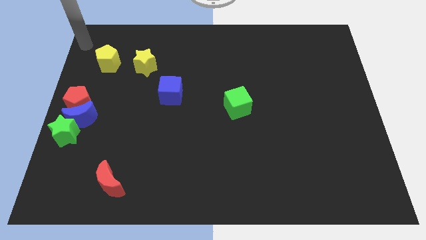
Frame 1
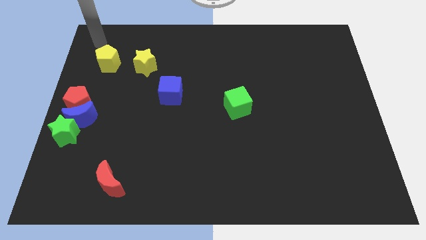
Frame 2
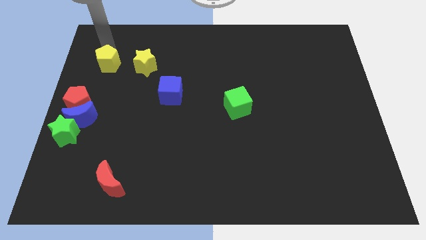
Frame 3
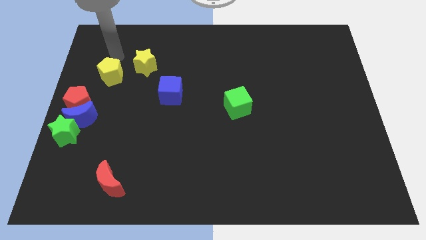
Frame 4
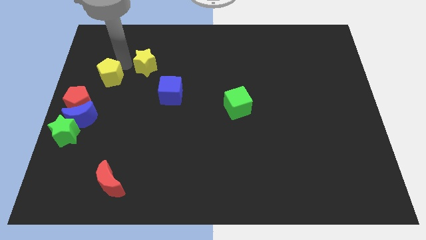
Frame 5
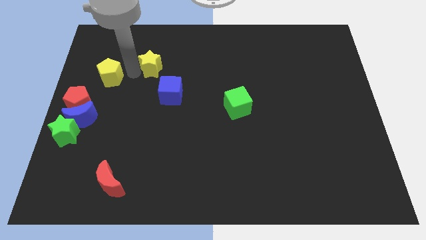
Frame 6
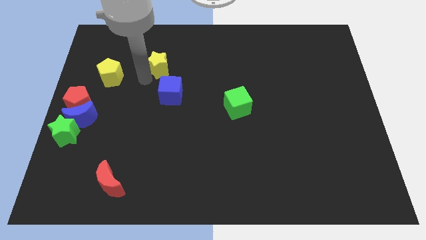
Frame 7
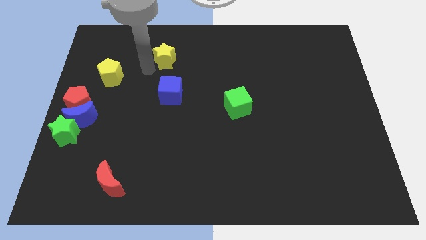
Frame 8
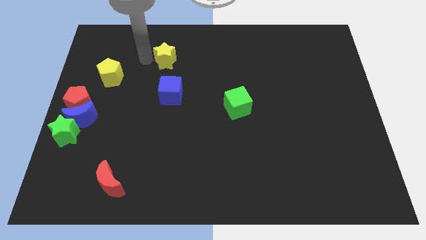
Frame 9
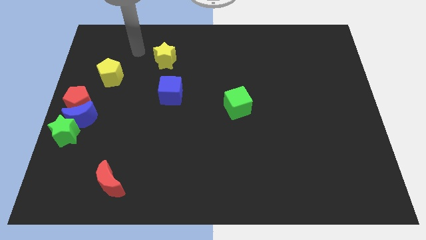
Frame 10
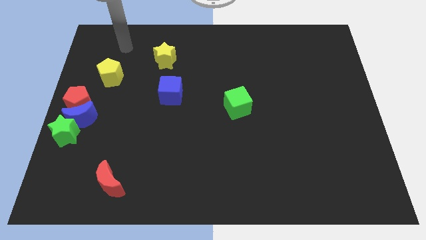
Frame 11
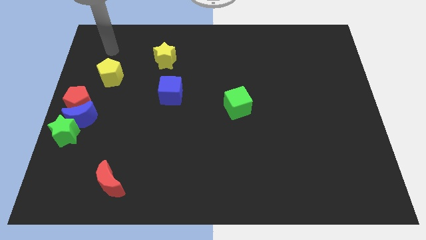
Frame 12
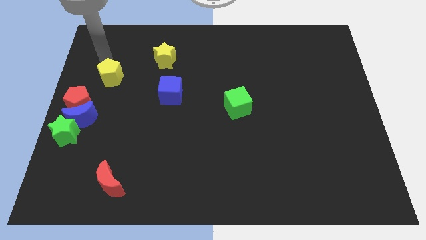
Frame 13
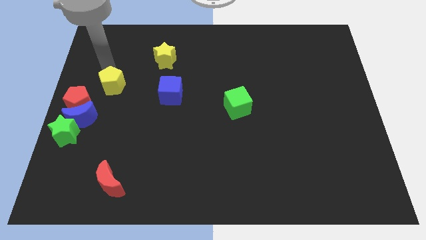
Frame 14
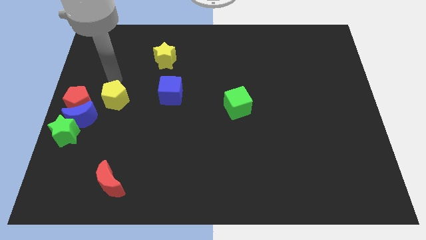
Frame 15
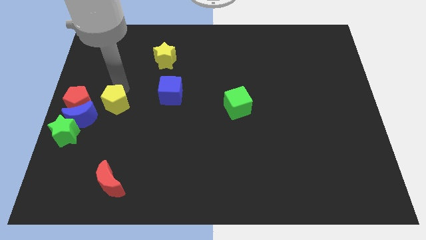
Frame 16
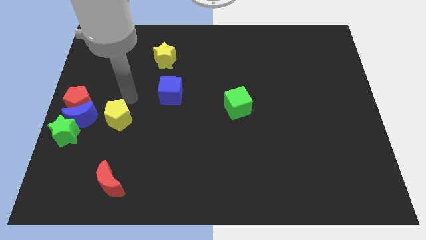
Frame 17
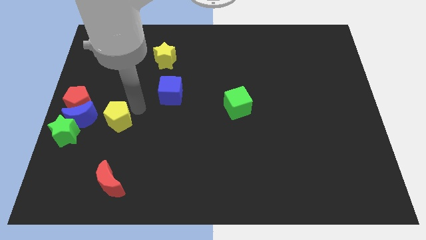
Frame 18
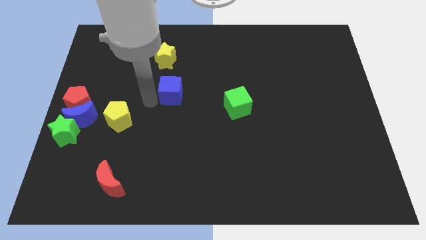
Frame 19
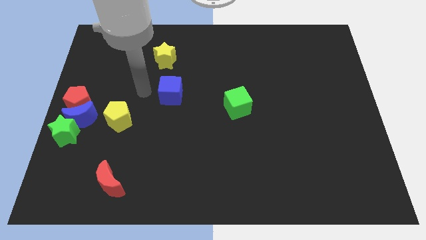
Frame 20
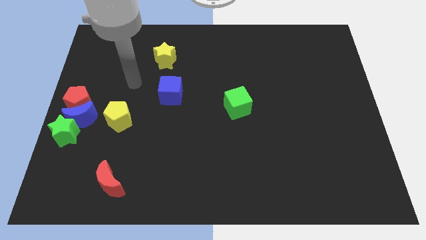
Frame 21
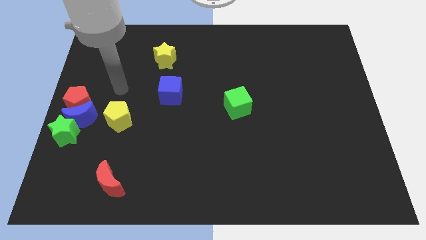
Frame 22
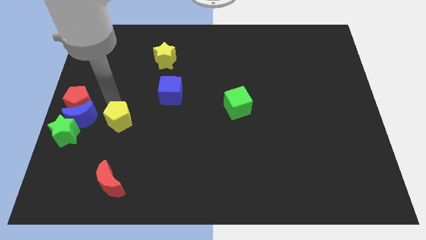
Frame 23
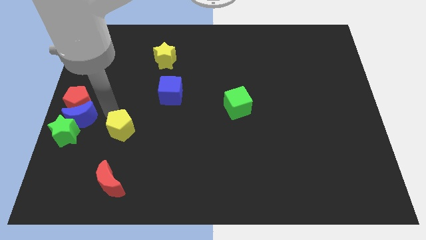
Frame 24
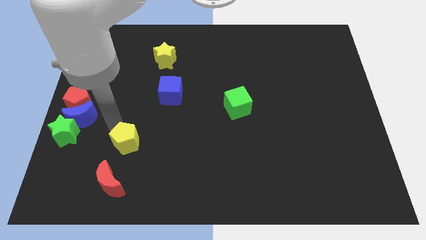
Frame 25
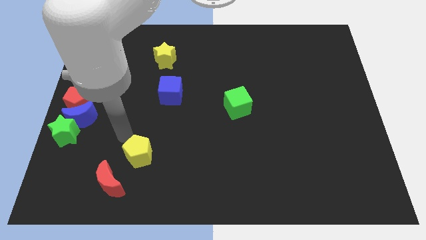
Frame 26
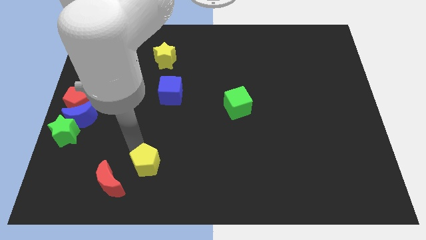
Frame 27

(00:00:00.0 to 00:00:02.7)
place the yellow pentagon right to the red moon

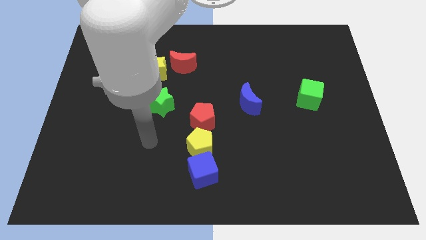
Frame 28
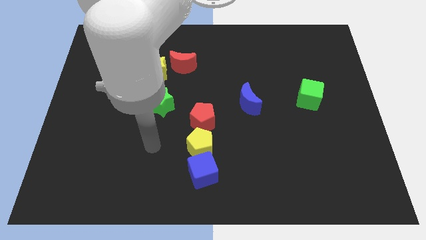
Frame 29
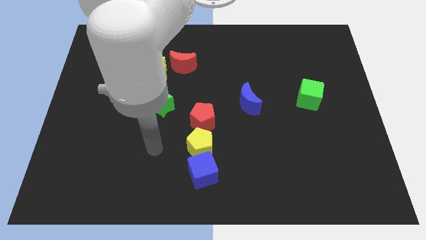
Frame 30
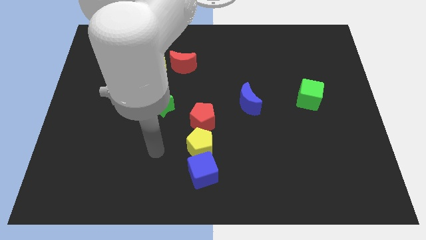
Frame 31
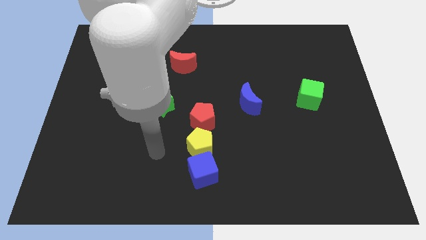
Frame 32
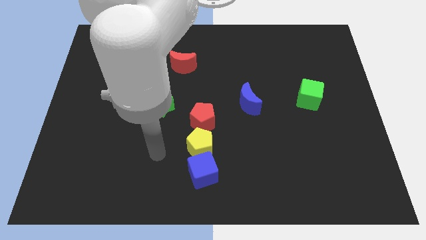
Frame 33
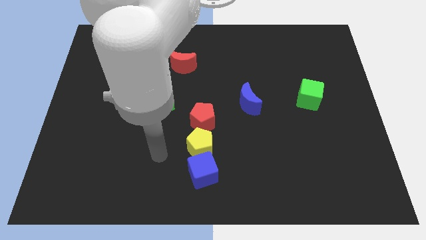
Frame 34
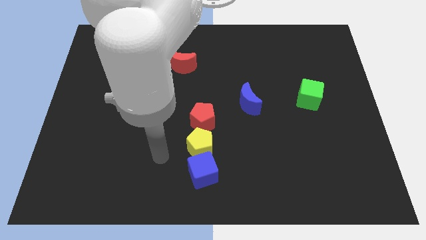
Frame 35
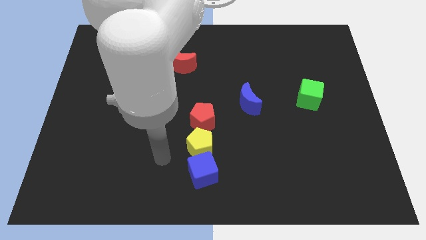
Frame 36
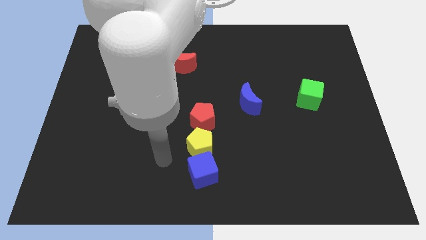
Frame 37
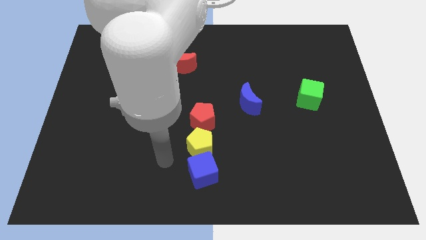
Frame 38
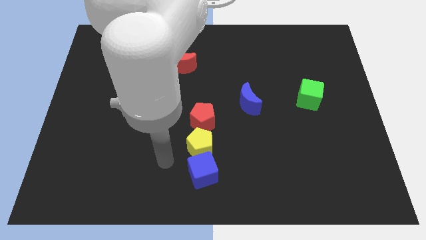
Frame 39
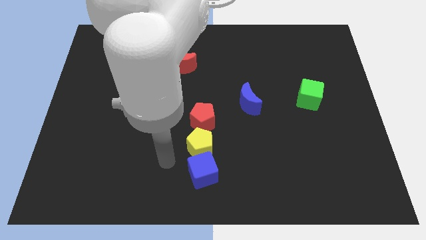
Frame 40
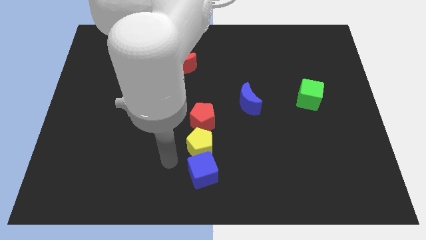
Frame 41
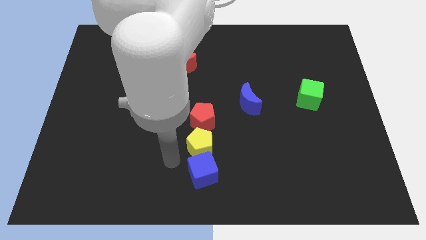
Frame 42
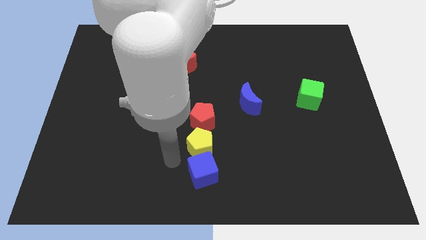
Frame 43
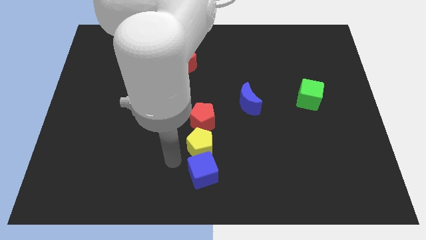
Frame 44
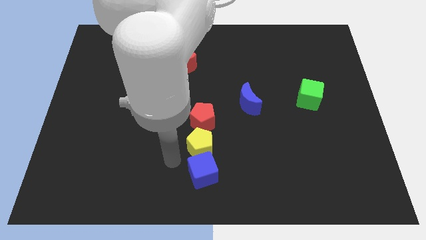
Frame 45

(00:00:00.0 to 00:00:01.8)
move your arm near the blue cube

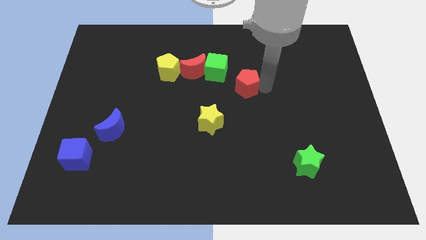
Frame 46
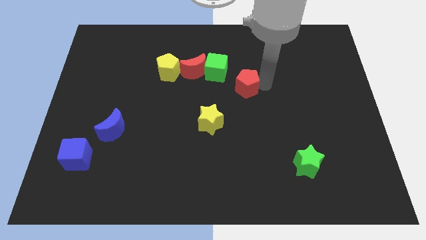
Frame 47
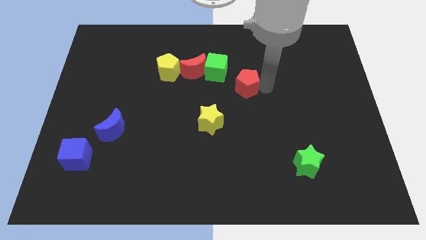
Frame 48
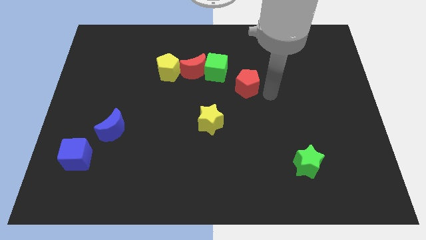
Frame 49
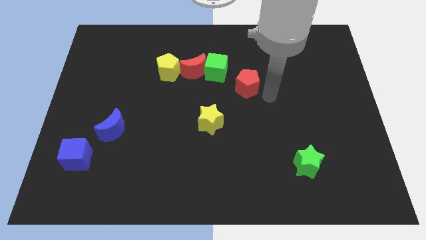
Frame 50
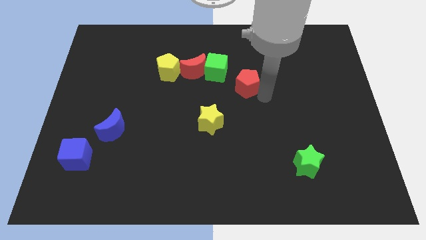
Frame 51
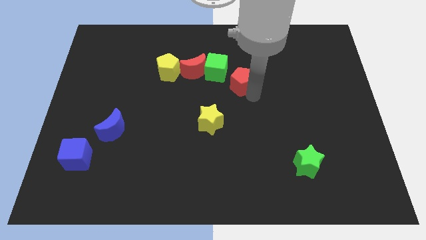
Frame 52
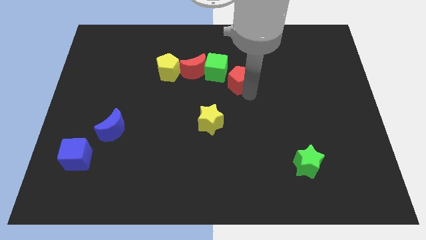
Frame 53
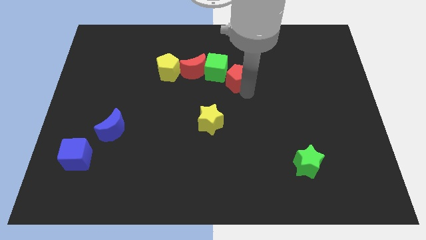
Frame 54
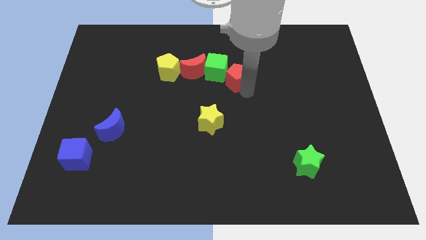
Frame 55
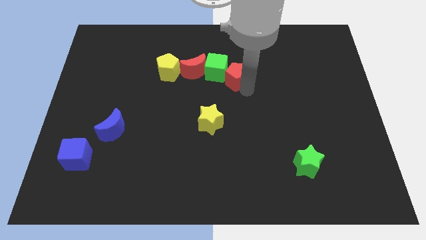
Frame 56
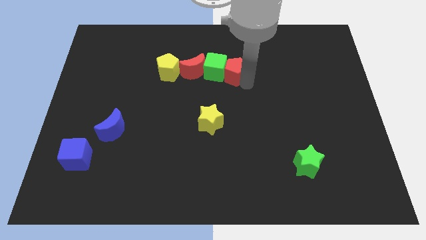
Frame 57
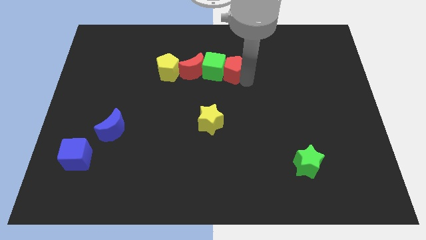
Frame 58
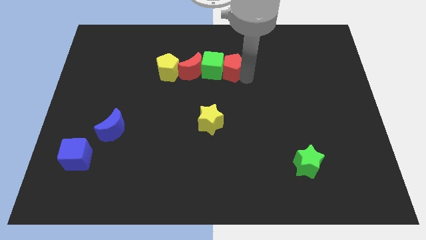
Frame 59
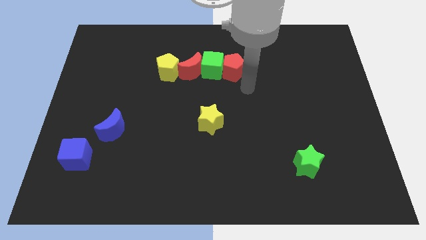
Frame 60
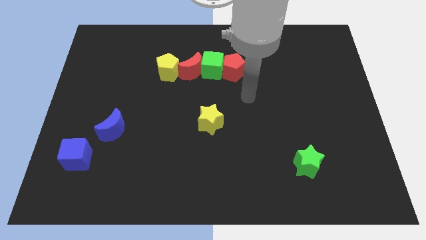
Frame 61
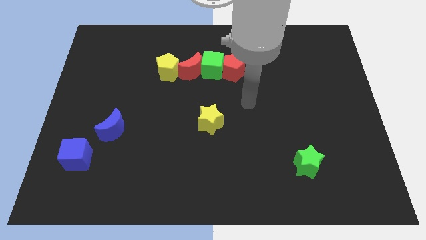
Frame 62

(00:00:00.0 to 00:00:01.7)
place the red pentagon to the right side of the green cube

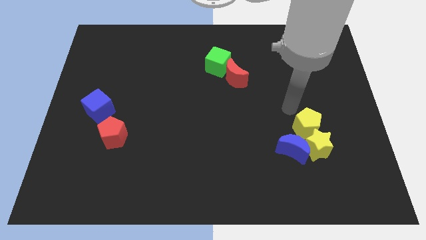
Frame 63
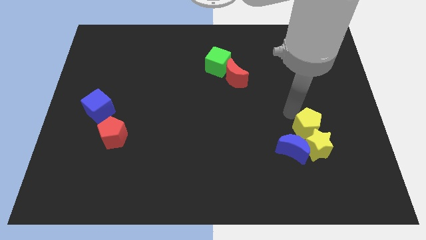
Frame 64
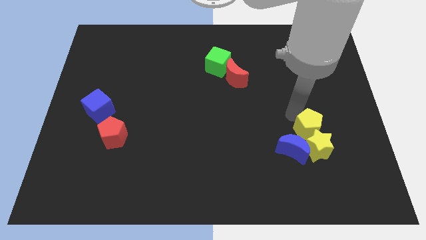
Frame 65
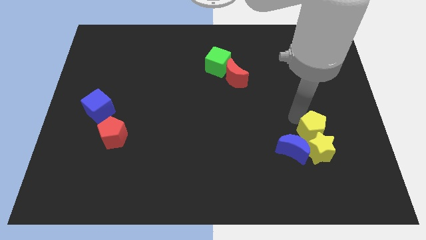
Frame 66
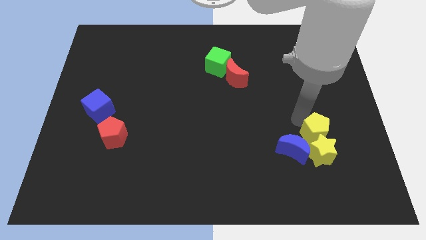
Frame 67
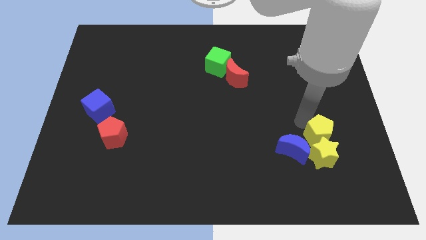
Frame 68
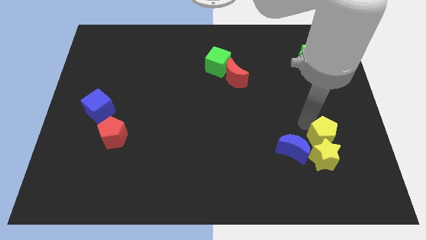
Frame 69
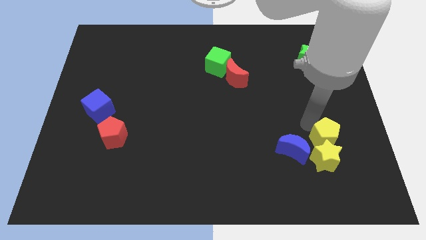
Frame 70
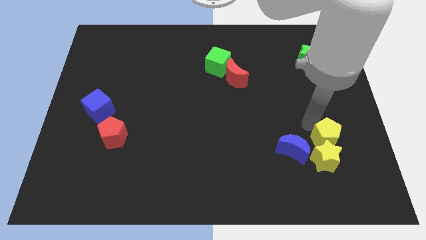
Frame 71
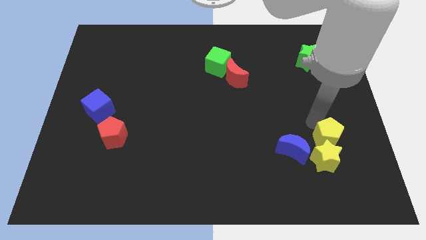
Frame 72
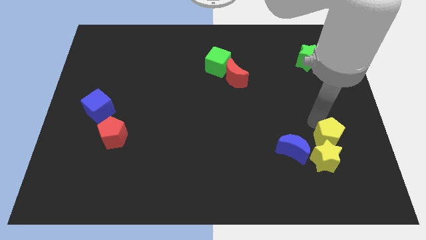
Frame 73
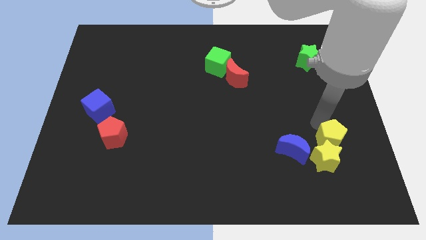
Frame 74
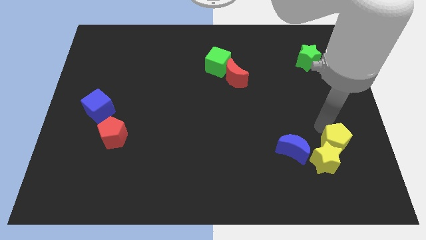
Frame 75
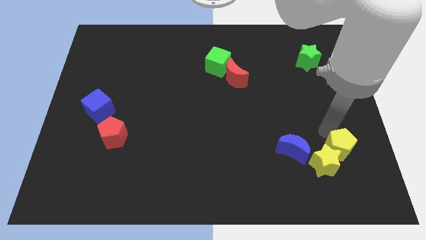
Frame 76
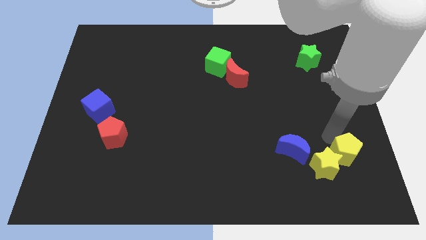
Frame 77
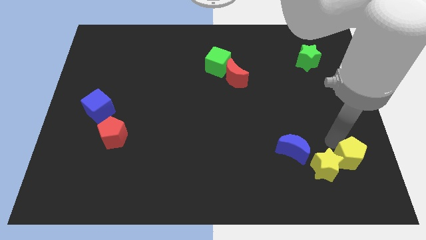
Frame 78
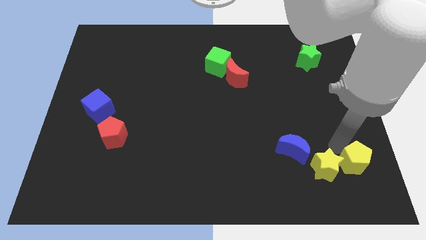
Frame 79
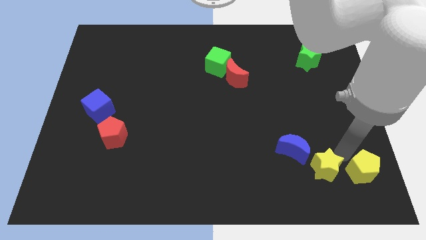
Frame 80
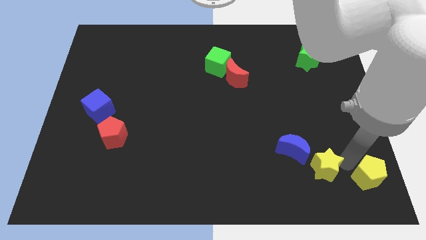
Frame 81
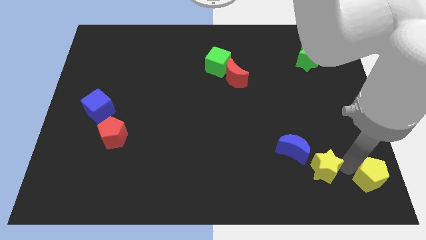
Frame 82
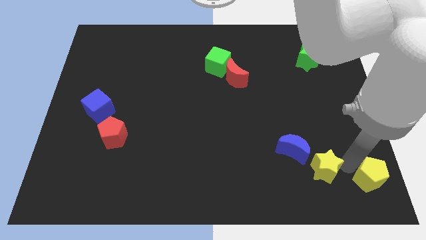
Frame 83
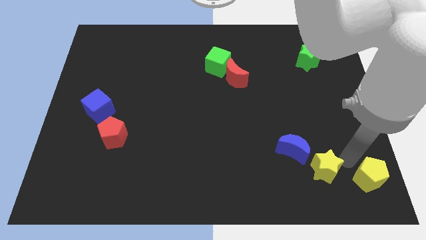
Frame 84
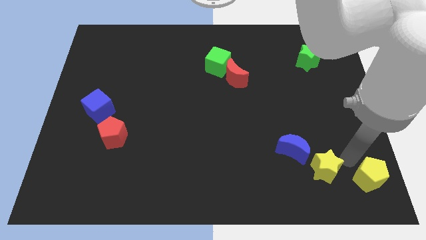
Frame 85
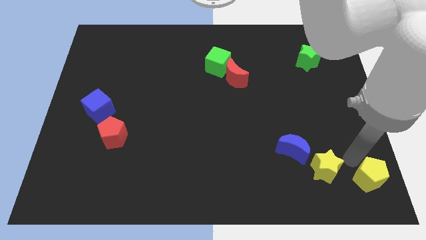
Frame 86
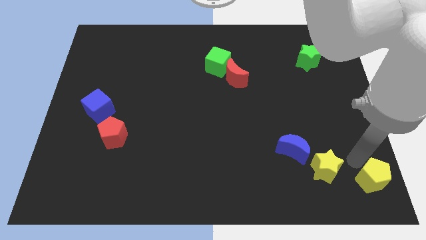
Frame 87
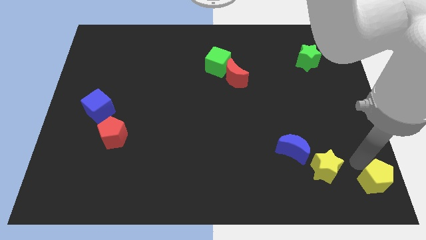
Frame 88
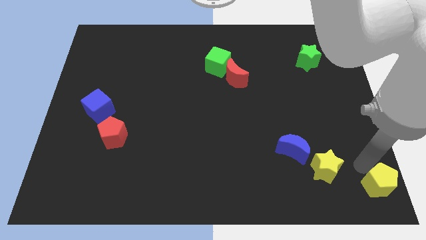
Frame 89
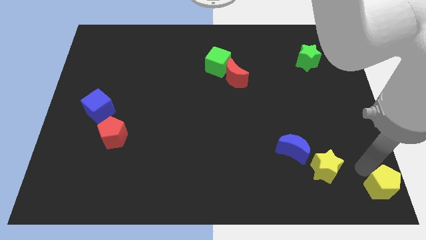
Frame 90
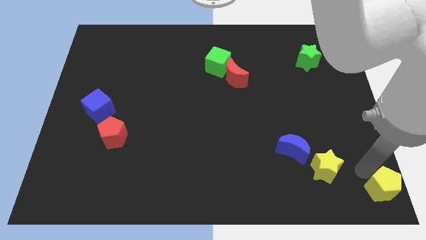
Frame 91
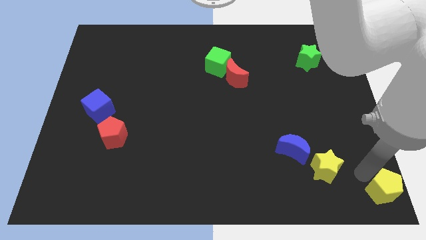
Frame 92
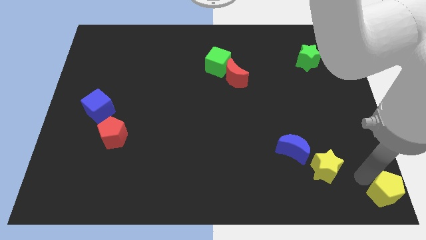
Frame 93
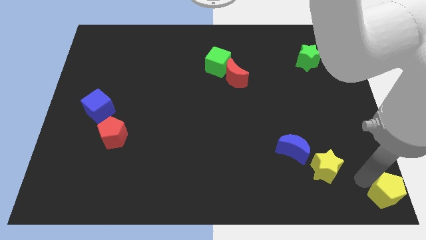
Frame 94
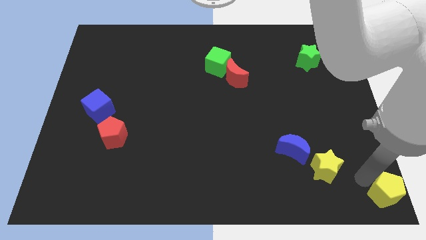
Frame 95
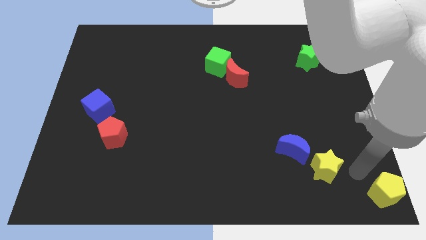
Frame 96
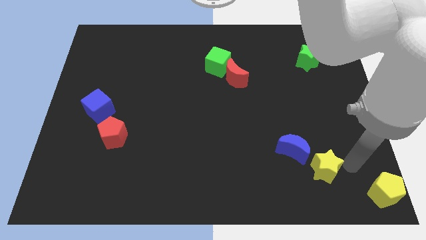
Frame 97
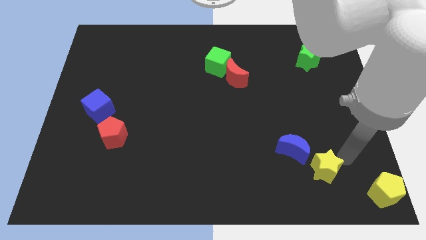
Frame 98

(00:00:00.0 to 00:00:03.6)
push the yellow pentagon to the bottom right of the board
